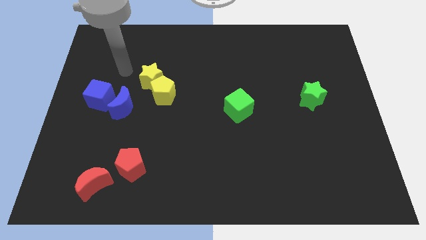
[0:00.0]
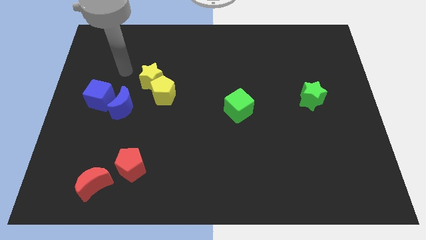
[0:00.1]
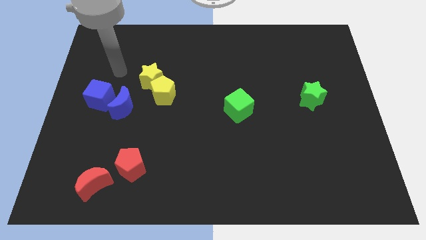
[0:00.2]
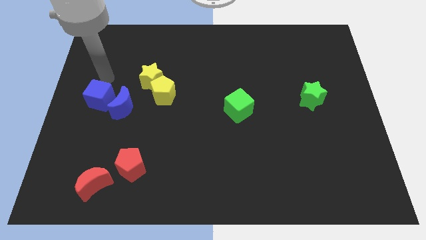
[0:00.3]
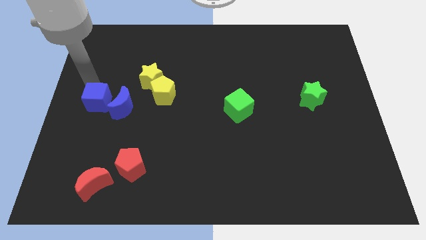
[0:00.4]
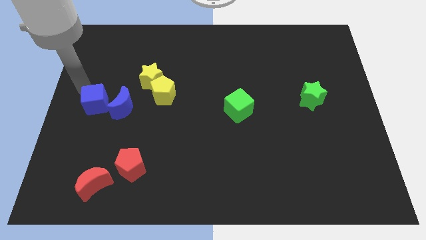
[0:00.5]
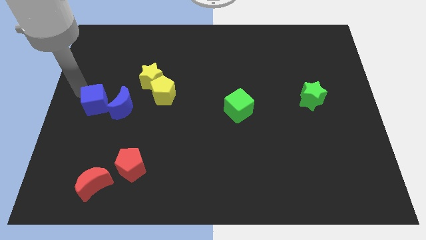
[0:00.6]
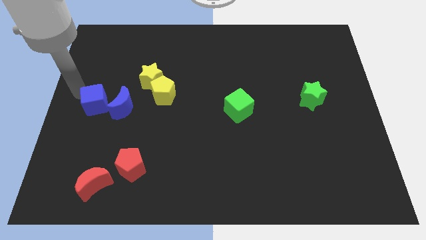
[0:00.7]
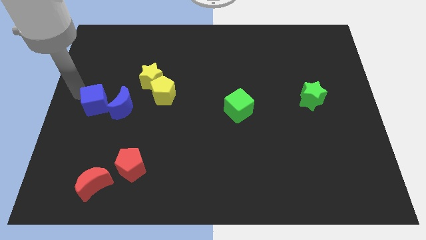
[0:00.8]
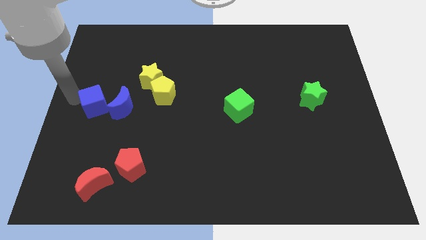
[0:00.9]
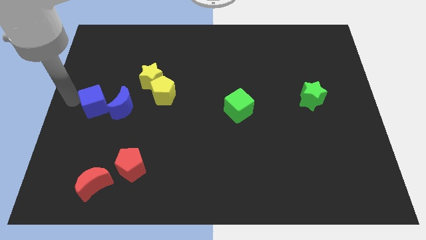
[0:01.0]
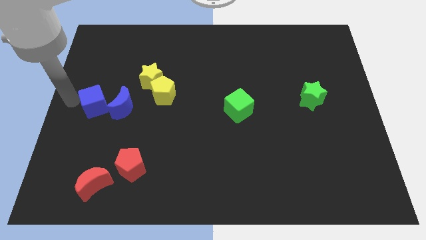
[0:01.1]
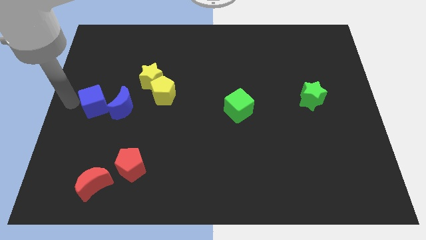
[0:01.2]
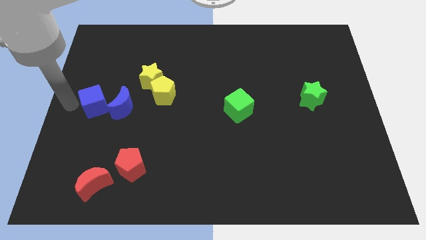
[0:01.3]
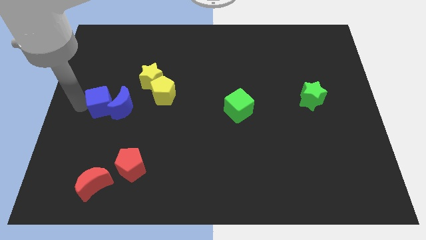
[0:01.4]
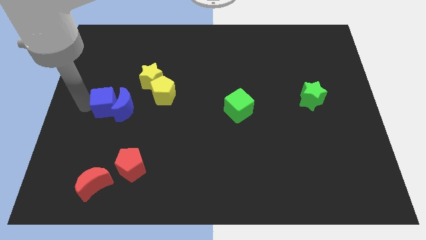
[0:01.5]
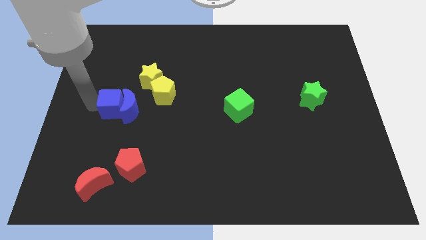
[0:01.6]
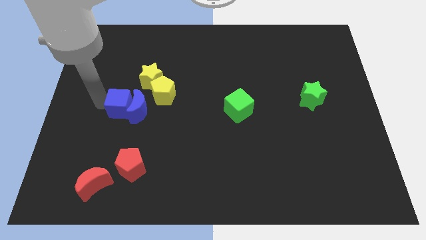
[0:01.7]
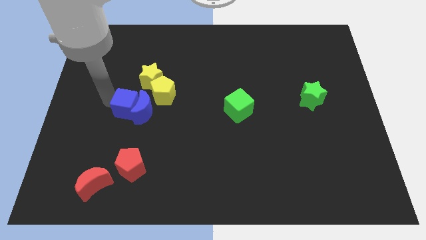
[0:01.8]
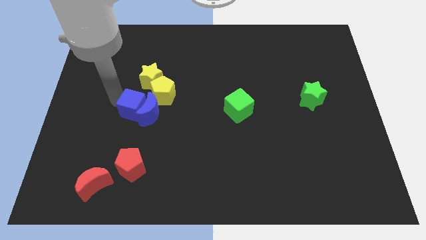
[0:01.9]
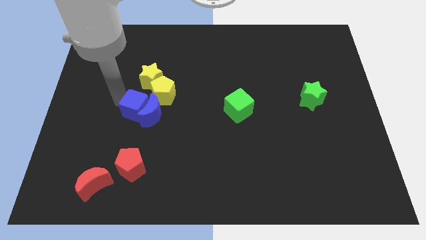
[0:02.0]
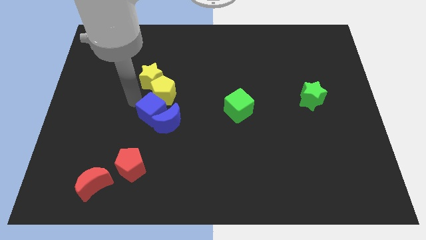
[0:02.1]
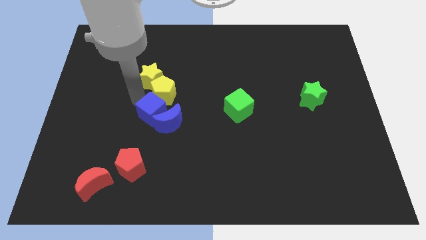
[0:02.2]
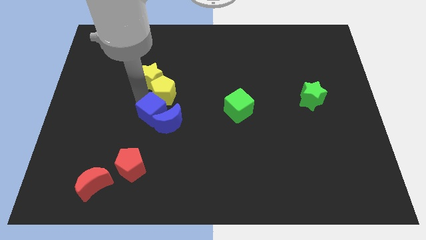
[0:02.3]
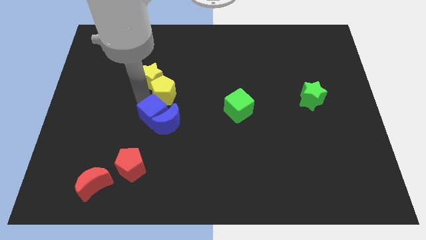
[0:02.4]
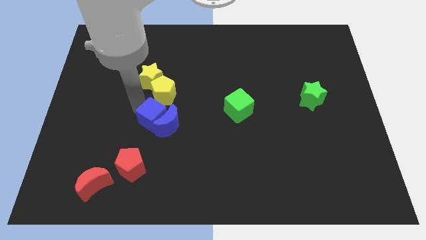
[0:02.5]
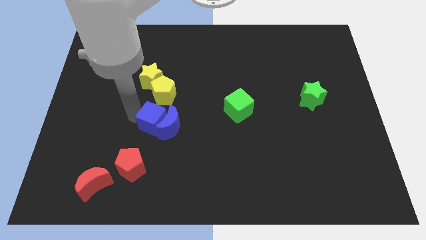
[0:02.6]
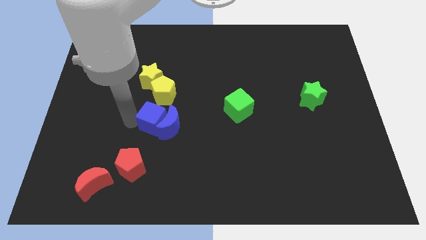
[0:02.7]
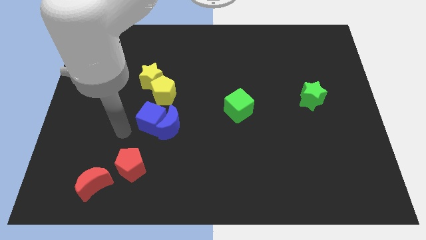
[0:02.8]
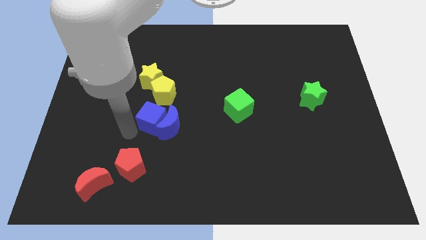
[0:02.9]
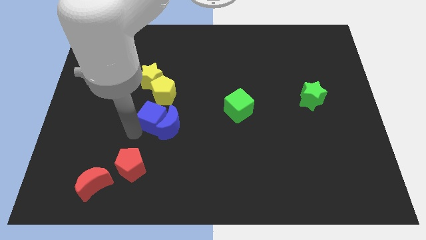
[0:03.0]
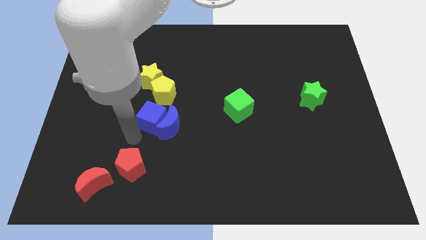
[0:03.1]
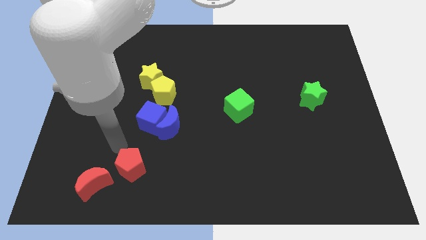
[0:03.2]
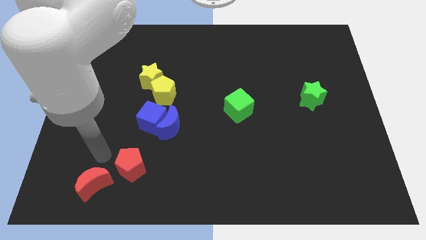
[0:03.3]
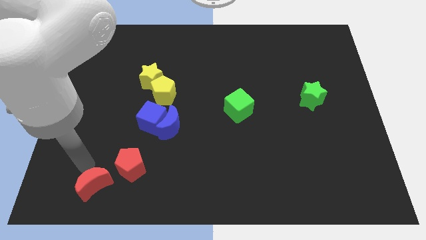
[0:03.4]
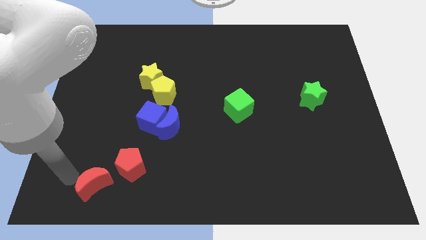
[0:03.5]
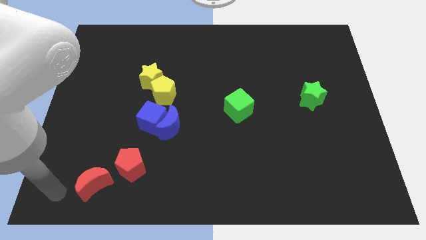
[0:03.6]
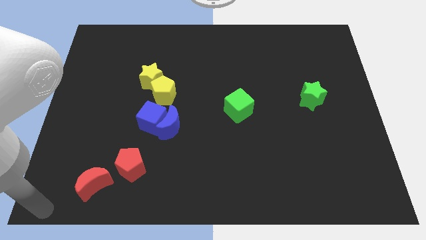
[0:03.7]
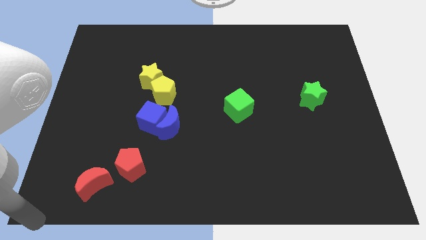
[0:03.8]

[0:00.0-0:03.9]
push the blue cube to the left of the blue crescent

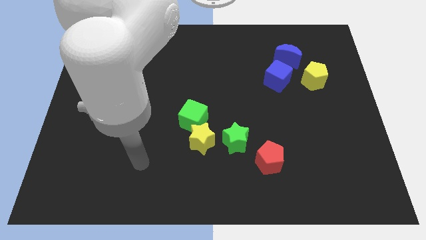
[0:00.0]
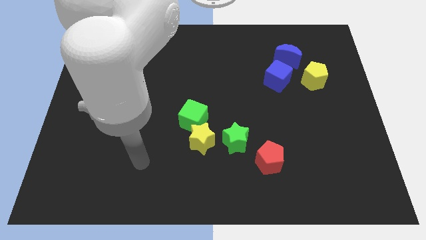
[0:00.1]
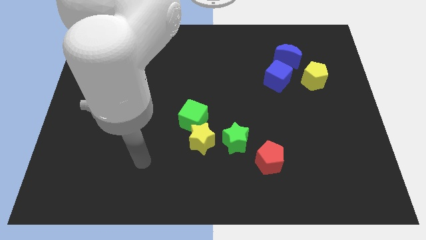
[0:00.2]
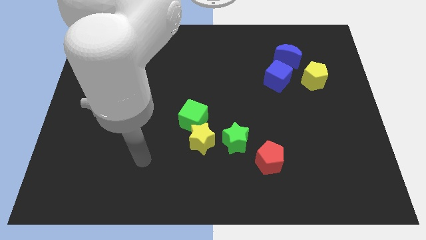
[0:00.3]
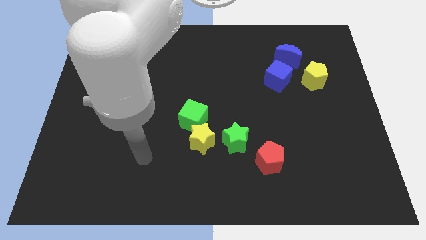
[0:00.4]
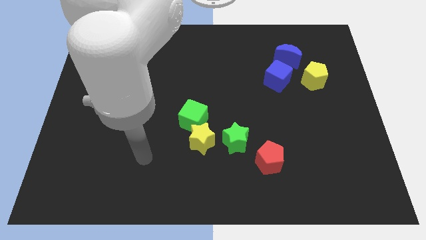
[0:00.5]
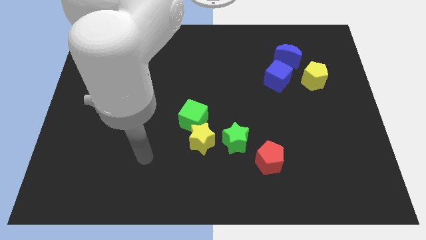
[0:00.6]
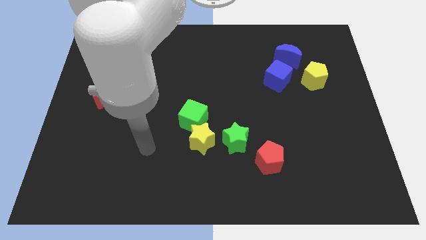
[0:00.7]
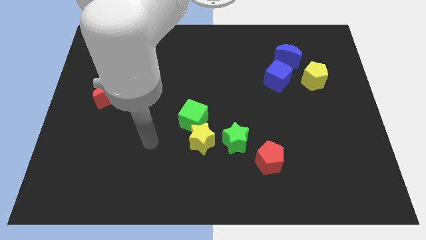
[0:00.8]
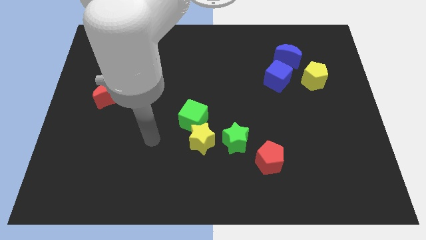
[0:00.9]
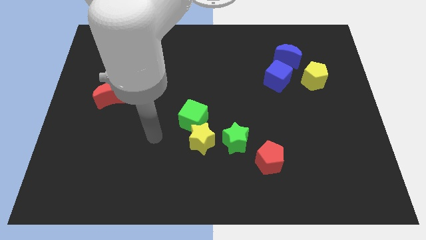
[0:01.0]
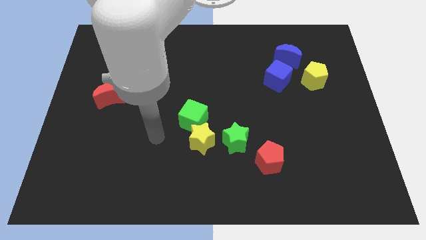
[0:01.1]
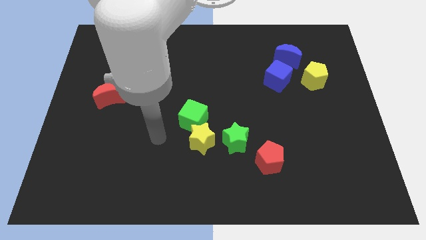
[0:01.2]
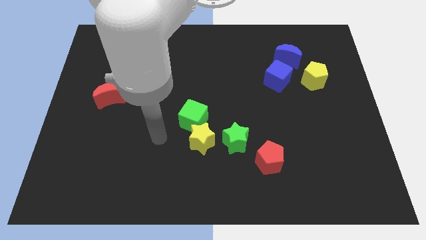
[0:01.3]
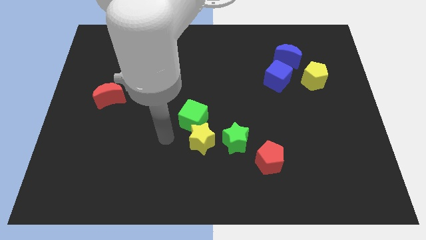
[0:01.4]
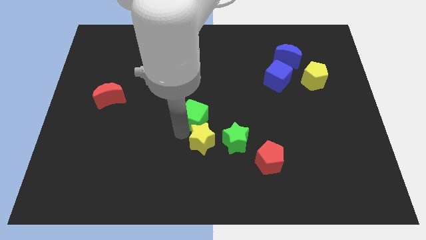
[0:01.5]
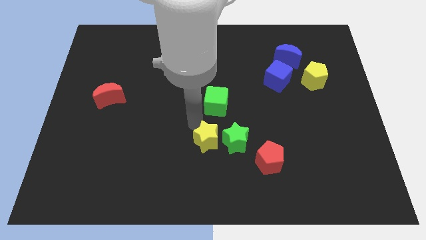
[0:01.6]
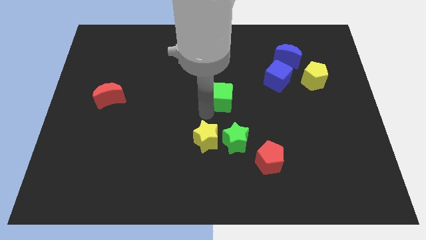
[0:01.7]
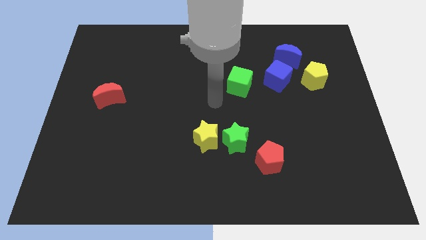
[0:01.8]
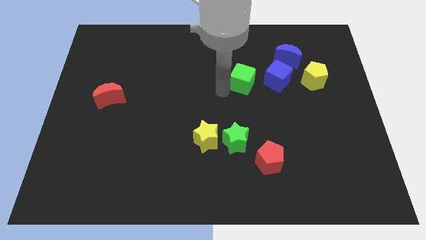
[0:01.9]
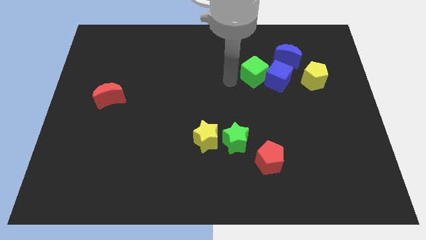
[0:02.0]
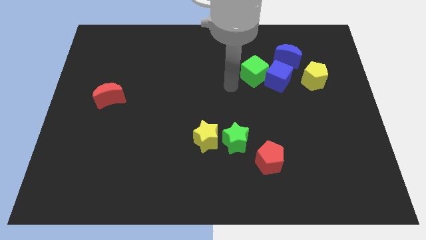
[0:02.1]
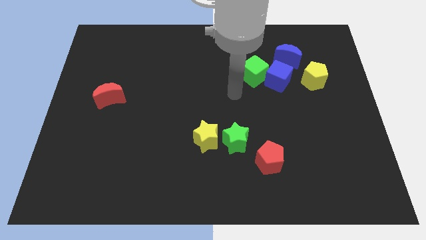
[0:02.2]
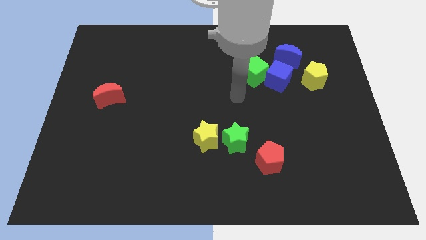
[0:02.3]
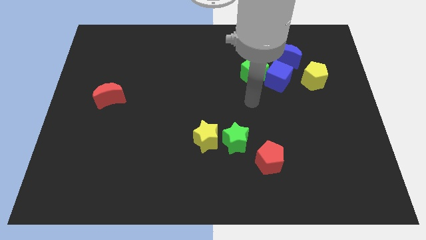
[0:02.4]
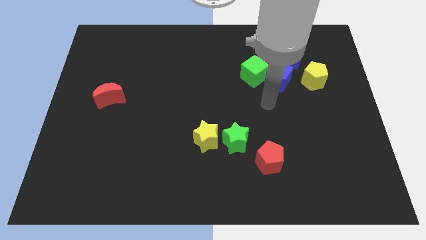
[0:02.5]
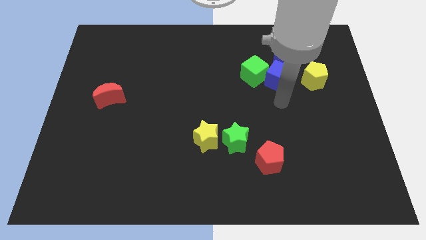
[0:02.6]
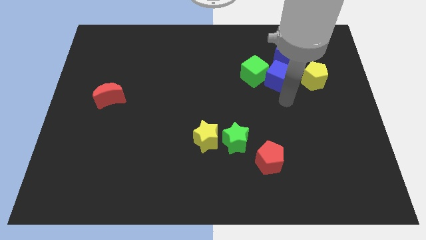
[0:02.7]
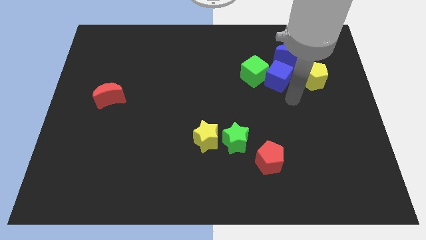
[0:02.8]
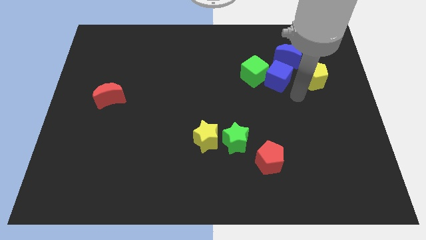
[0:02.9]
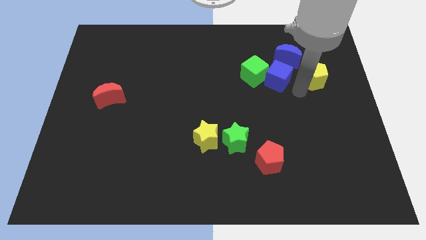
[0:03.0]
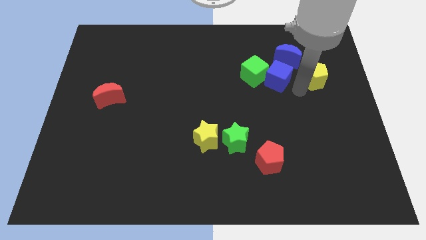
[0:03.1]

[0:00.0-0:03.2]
move green cube to the left of blue cube

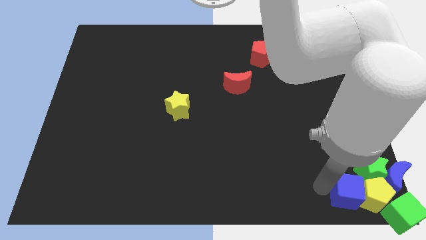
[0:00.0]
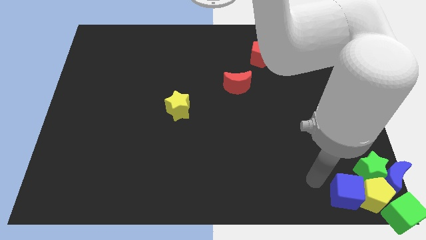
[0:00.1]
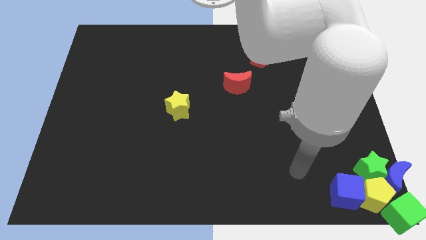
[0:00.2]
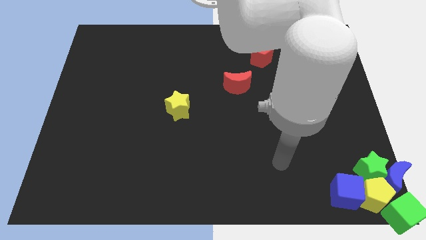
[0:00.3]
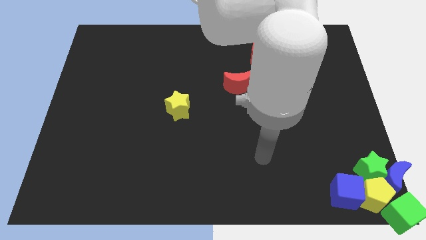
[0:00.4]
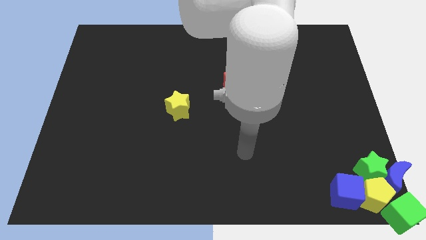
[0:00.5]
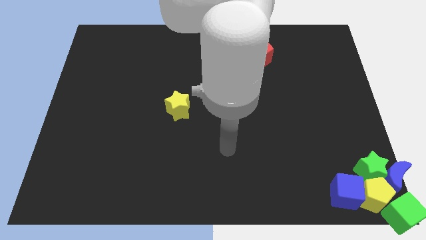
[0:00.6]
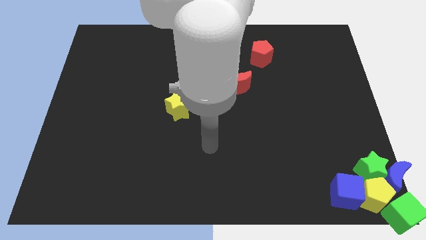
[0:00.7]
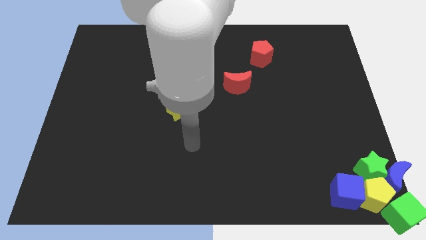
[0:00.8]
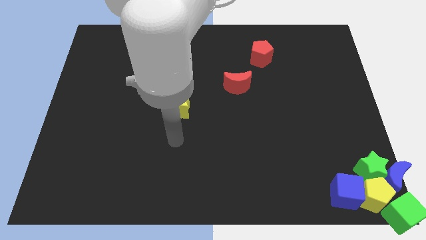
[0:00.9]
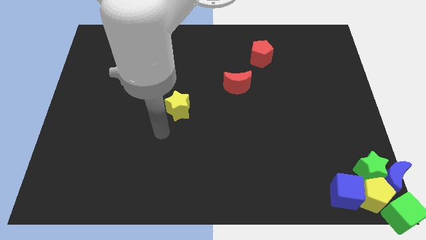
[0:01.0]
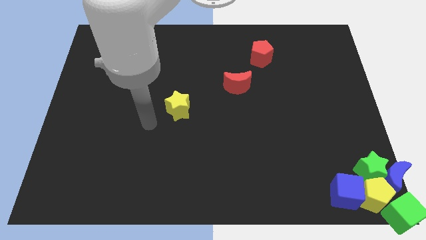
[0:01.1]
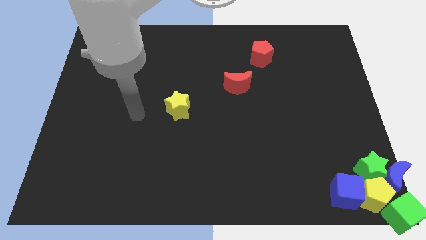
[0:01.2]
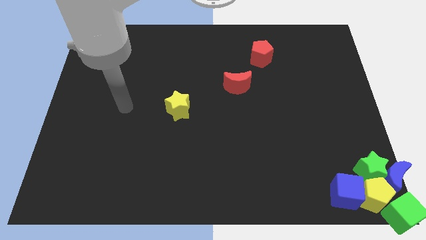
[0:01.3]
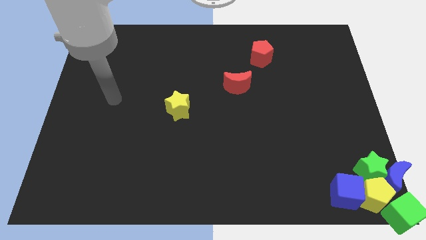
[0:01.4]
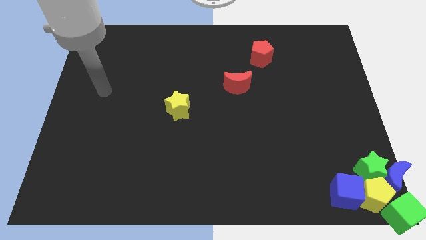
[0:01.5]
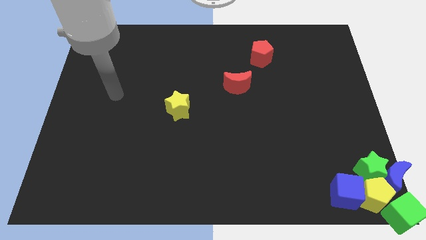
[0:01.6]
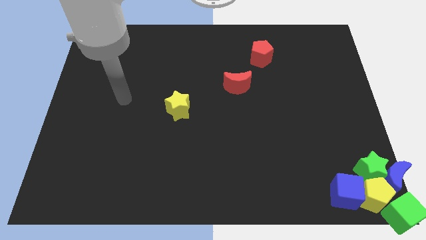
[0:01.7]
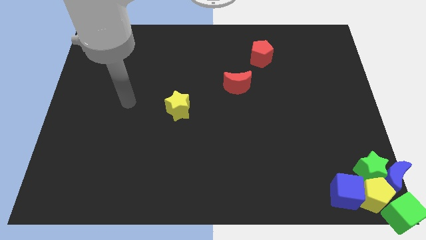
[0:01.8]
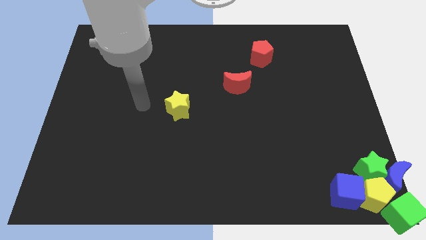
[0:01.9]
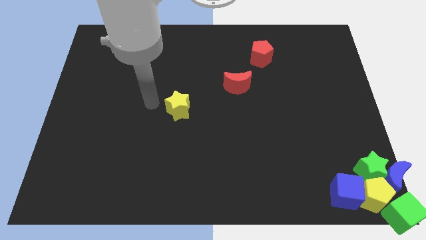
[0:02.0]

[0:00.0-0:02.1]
point your arm at the left of the yellow star
